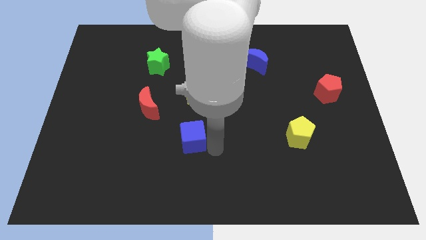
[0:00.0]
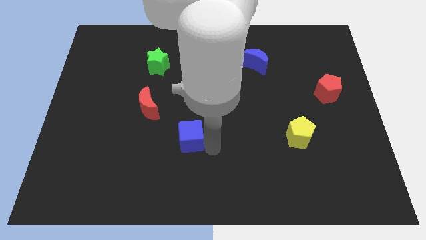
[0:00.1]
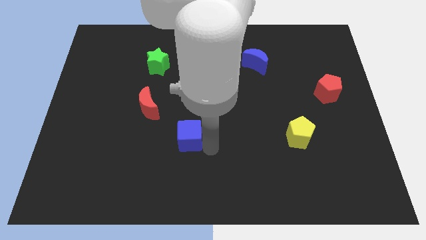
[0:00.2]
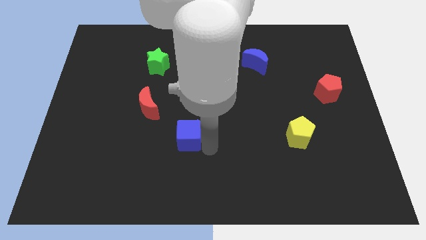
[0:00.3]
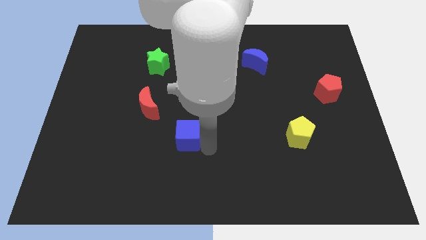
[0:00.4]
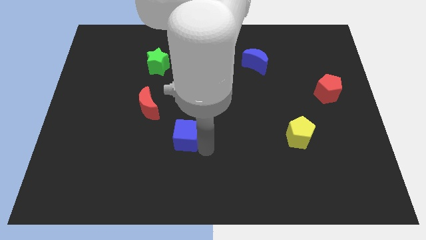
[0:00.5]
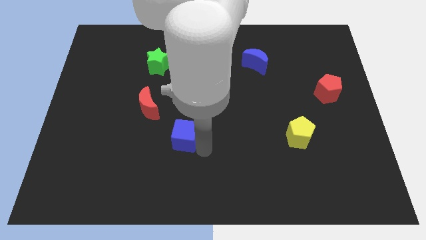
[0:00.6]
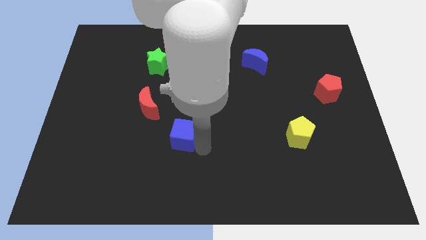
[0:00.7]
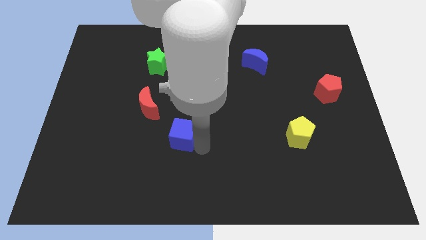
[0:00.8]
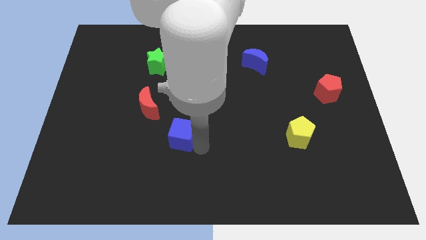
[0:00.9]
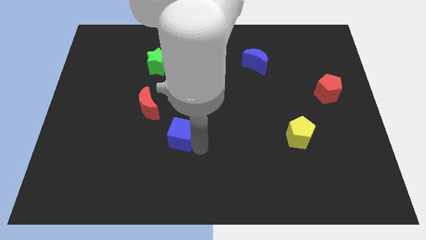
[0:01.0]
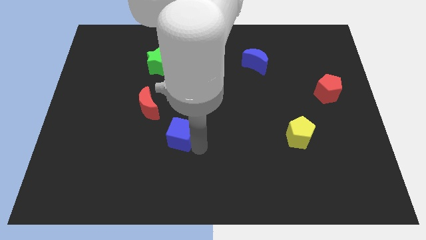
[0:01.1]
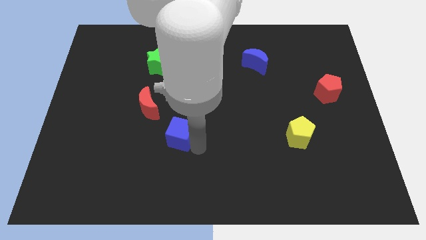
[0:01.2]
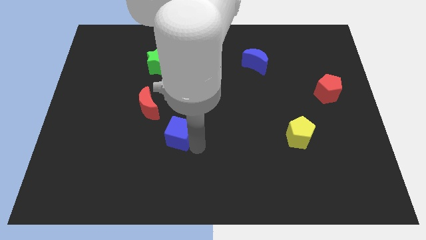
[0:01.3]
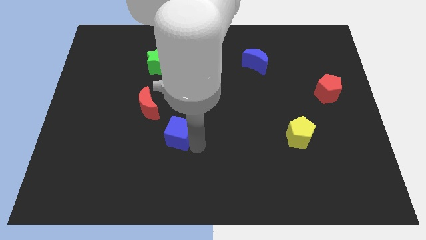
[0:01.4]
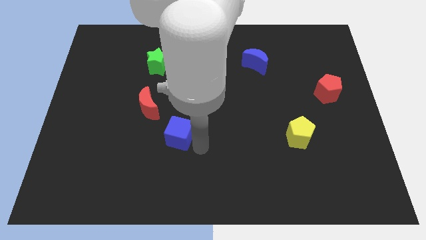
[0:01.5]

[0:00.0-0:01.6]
place the blue cube diagonally to the left of the yellow star

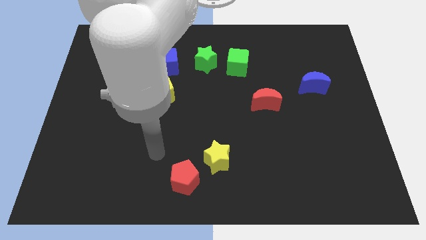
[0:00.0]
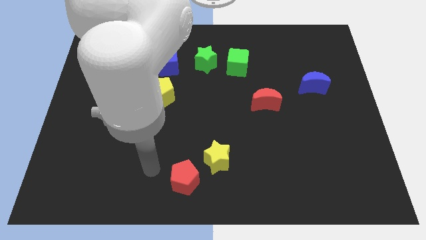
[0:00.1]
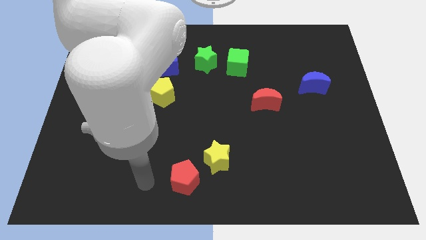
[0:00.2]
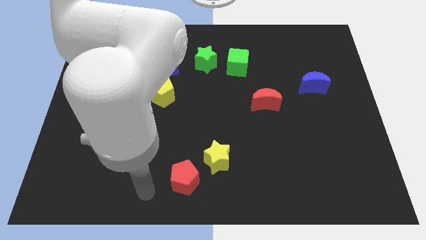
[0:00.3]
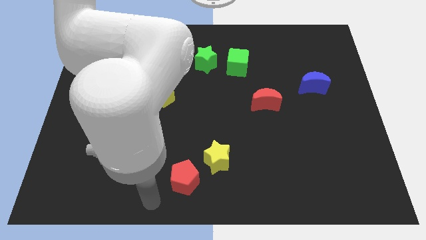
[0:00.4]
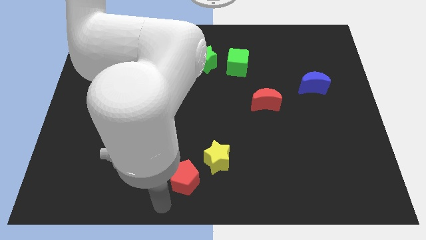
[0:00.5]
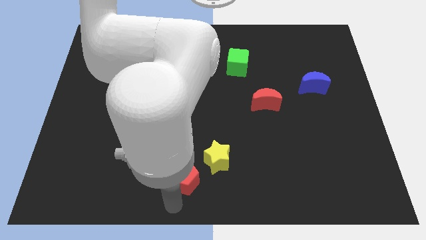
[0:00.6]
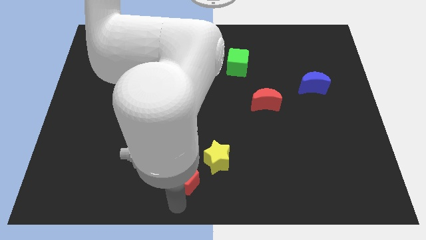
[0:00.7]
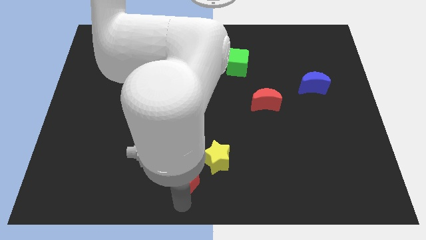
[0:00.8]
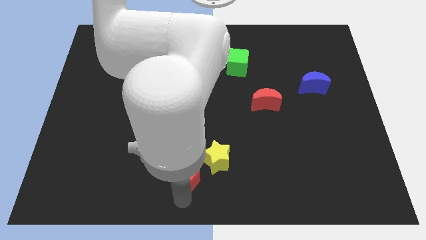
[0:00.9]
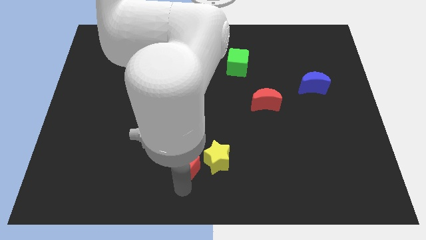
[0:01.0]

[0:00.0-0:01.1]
move your arm to the bottom of red pentagon

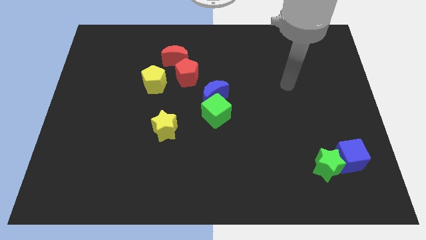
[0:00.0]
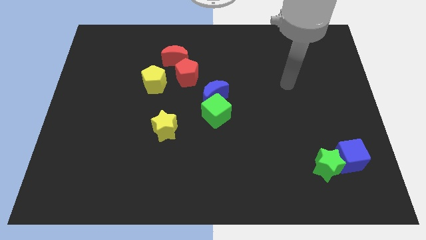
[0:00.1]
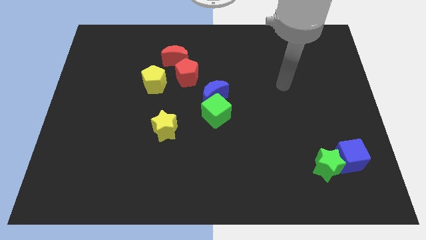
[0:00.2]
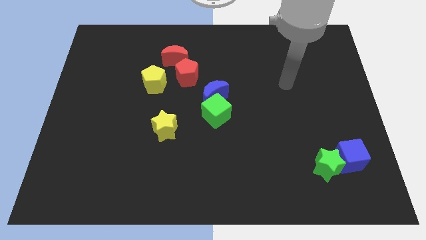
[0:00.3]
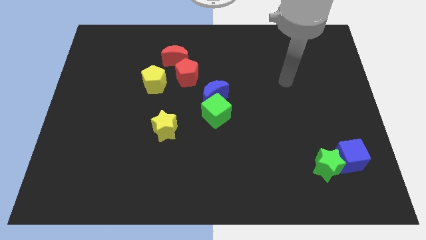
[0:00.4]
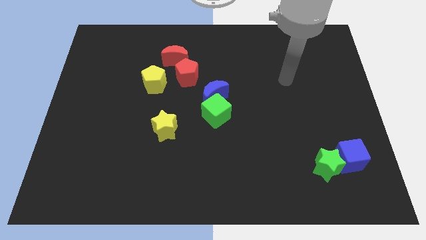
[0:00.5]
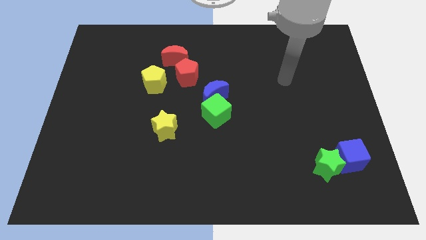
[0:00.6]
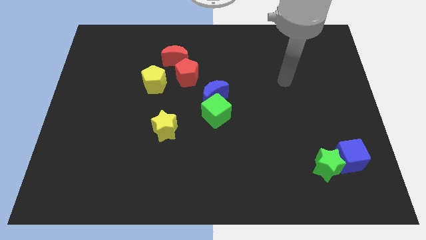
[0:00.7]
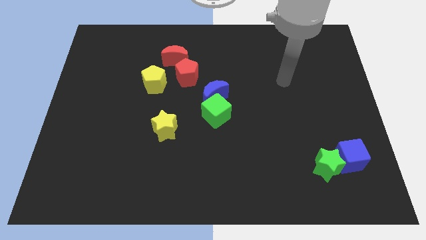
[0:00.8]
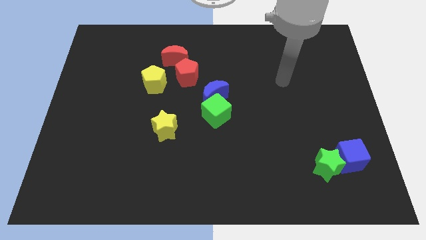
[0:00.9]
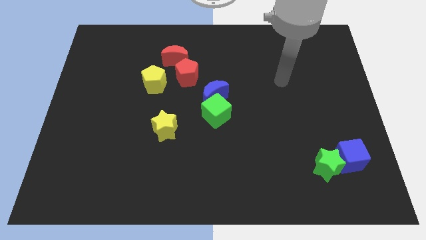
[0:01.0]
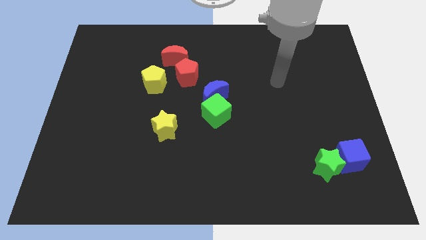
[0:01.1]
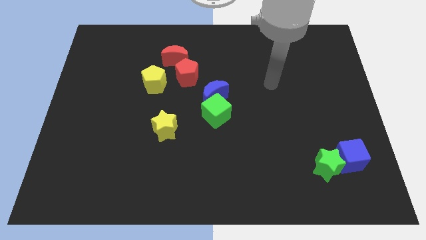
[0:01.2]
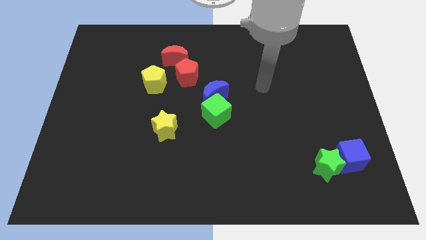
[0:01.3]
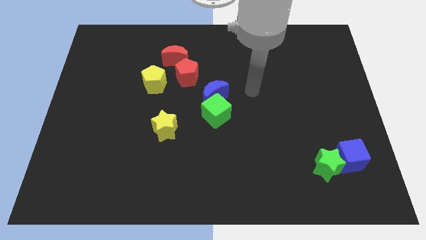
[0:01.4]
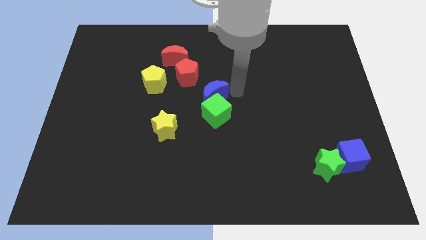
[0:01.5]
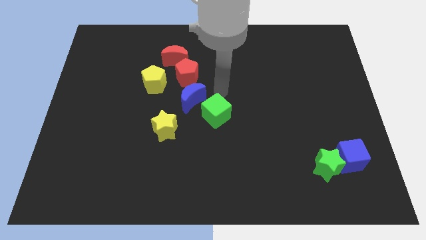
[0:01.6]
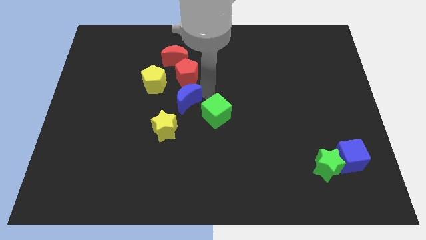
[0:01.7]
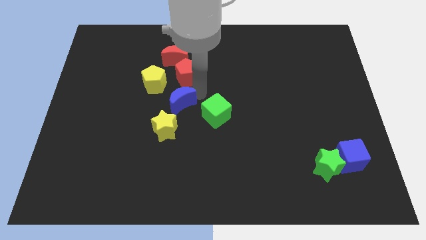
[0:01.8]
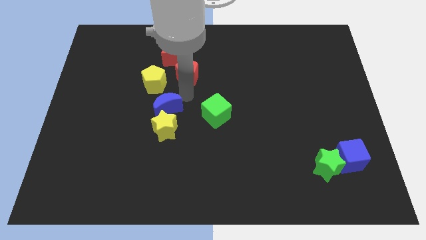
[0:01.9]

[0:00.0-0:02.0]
place the blue crescent above the yellow star

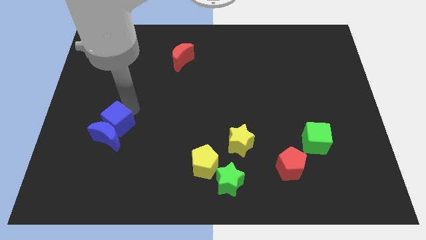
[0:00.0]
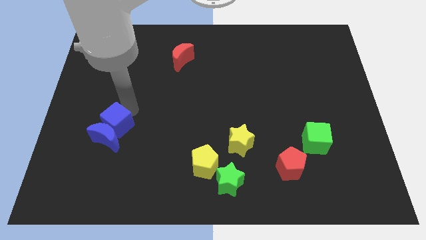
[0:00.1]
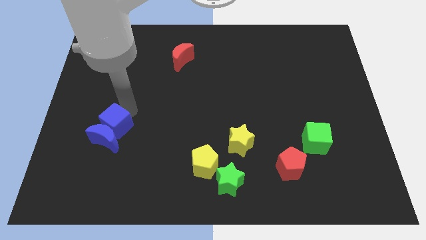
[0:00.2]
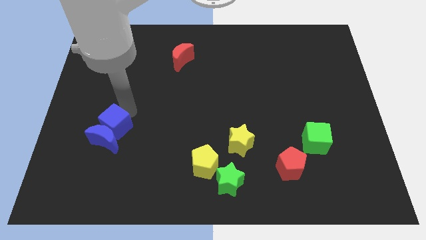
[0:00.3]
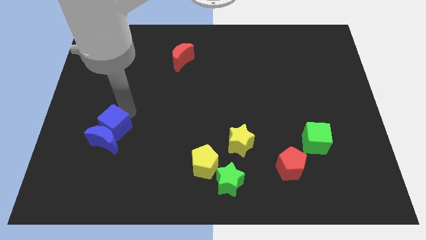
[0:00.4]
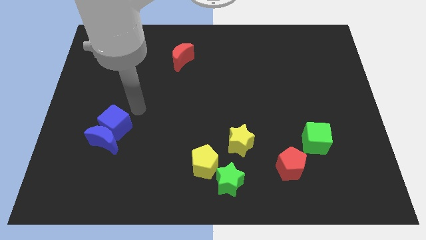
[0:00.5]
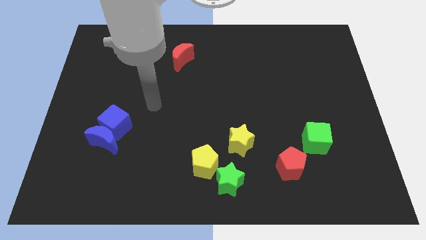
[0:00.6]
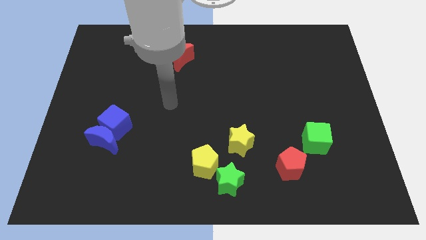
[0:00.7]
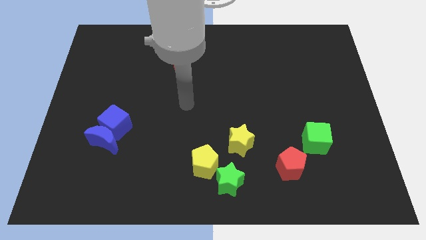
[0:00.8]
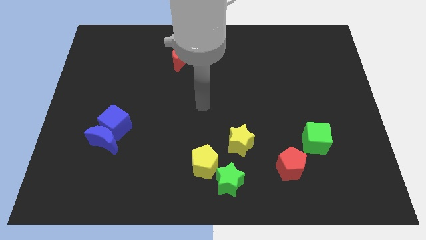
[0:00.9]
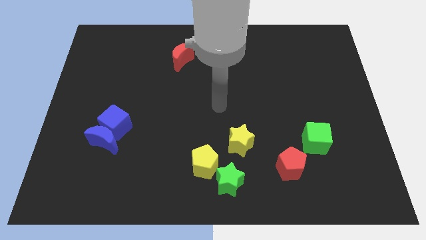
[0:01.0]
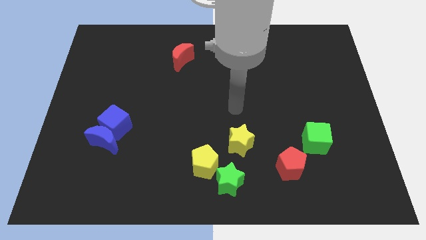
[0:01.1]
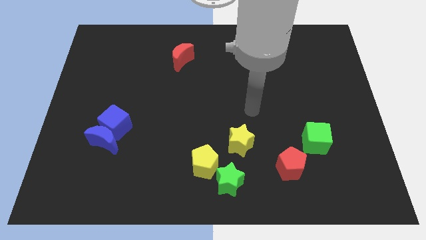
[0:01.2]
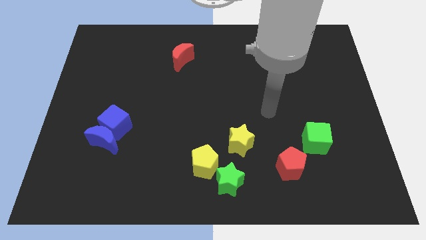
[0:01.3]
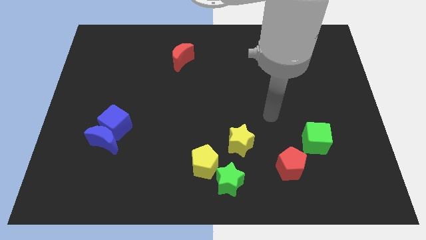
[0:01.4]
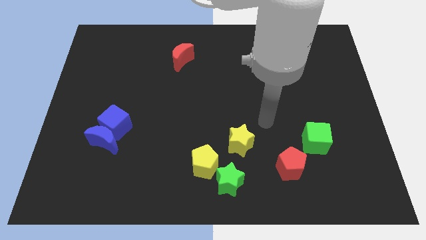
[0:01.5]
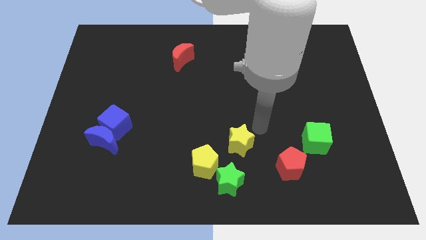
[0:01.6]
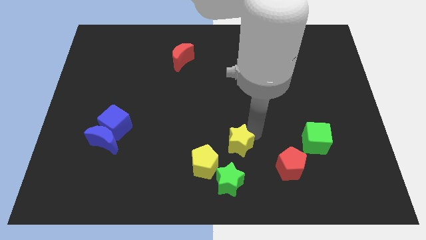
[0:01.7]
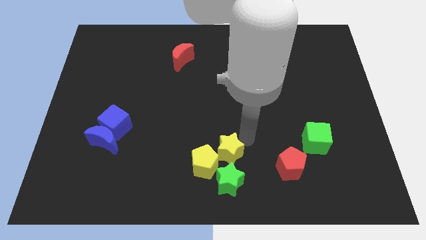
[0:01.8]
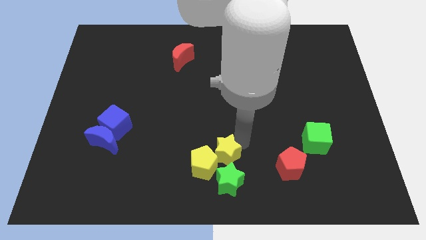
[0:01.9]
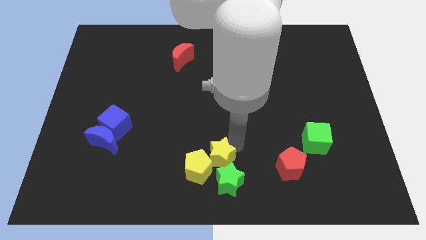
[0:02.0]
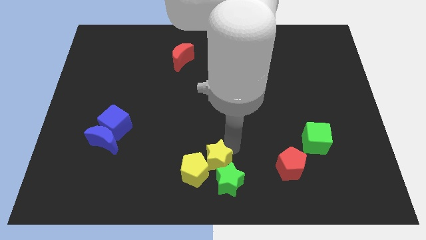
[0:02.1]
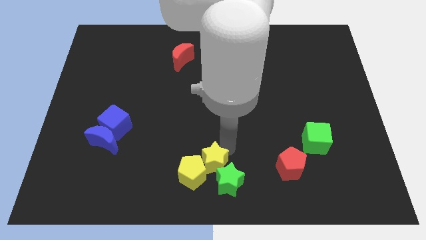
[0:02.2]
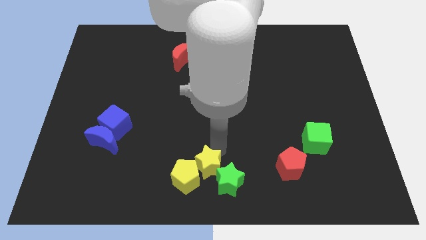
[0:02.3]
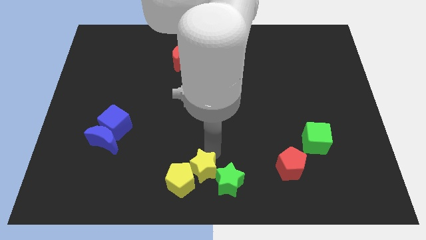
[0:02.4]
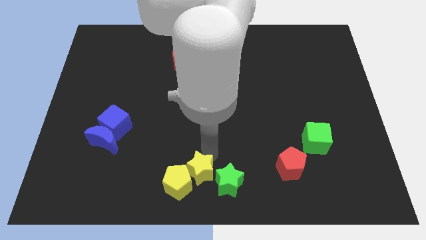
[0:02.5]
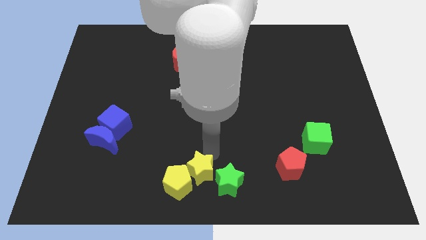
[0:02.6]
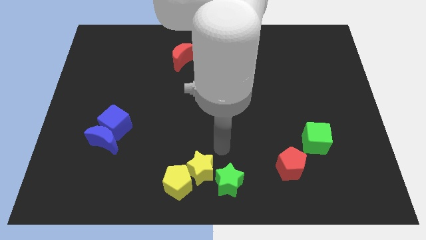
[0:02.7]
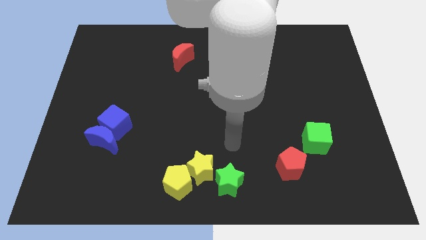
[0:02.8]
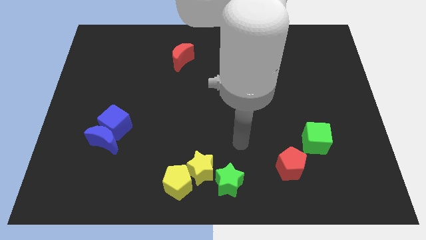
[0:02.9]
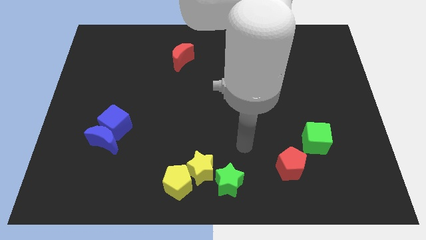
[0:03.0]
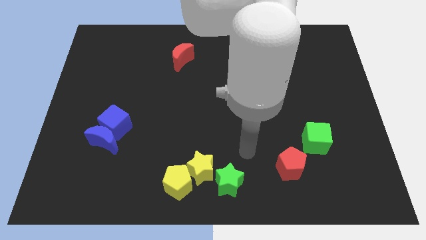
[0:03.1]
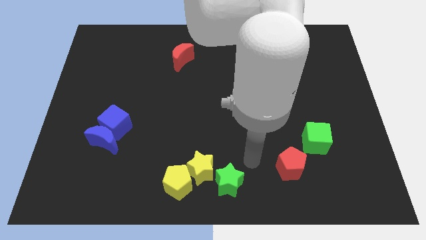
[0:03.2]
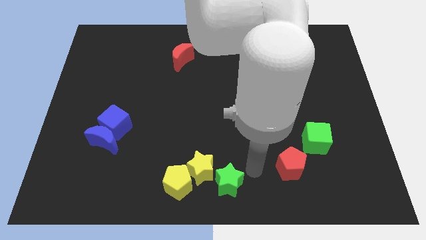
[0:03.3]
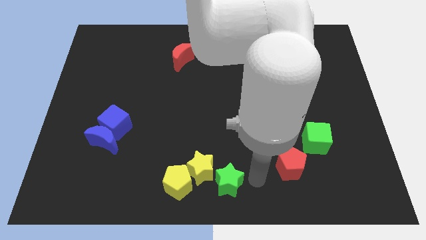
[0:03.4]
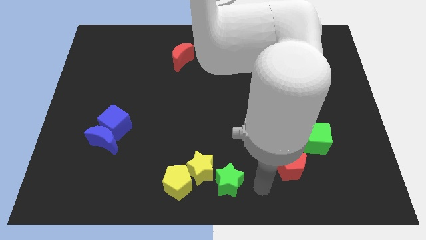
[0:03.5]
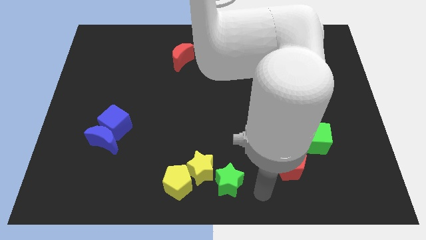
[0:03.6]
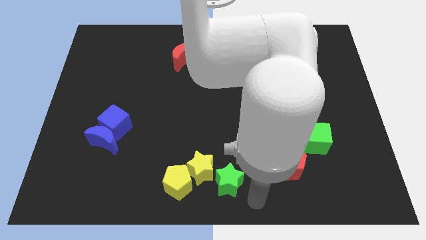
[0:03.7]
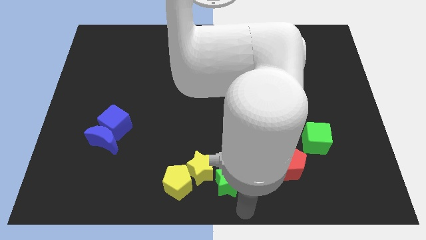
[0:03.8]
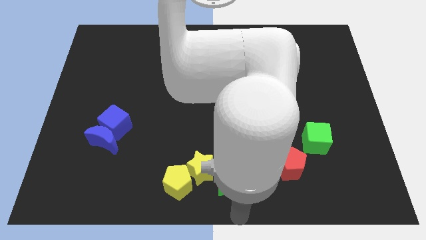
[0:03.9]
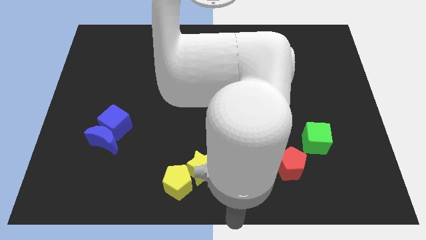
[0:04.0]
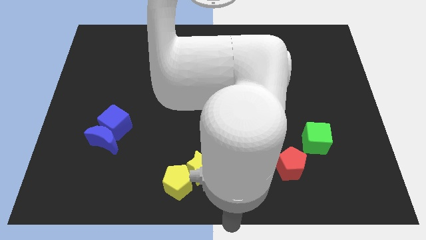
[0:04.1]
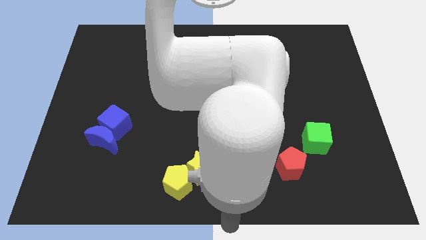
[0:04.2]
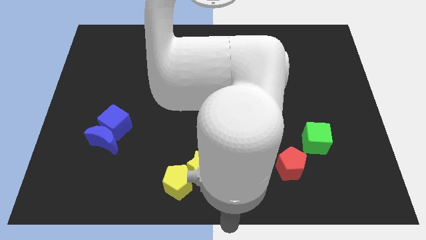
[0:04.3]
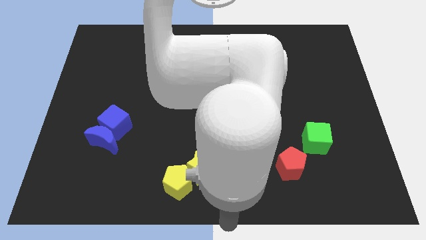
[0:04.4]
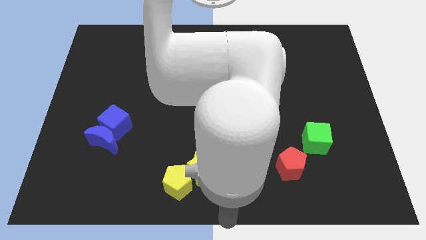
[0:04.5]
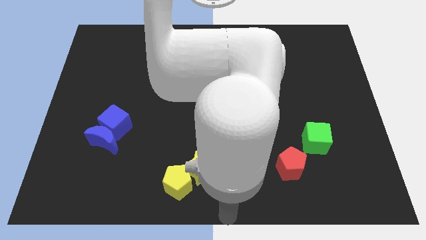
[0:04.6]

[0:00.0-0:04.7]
push the yellow star into the yellow pentagon
